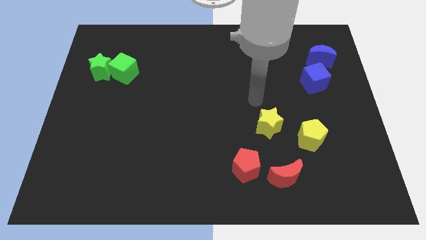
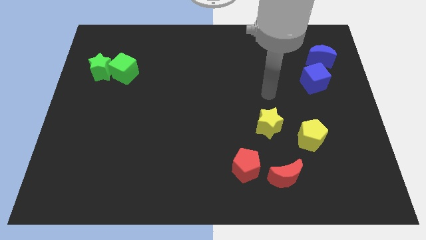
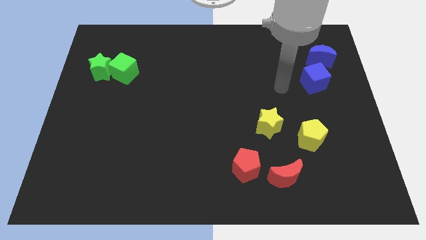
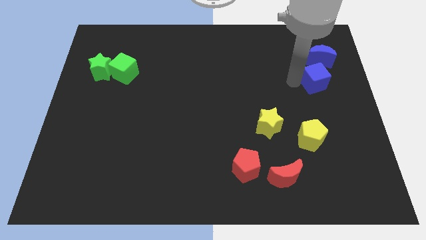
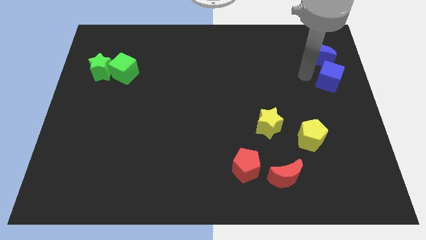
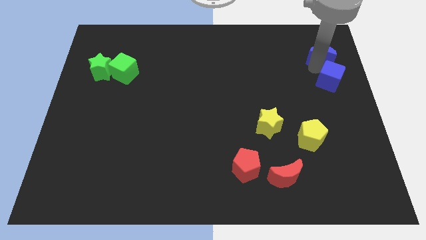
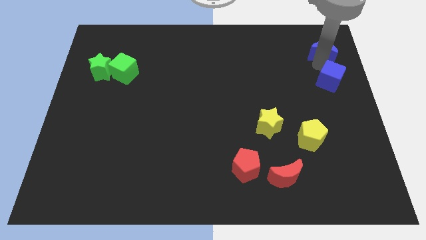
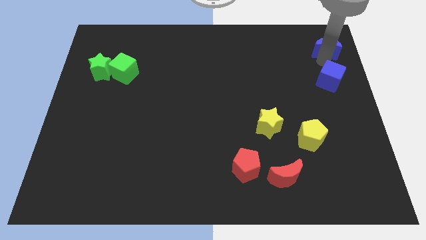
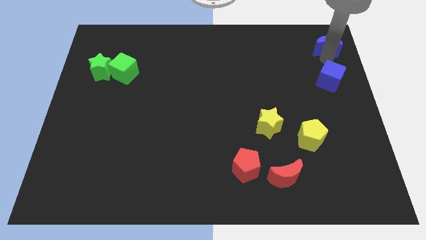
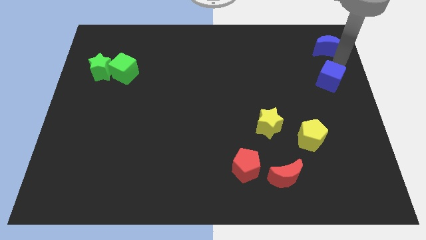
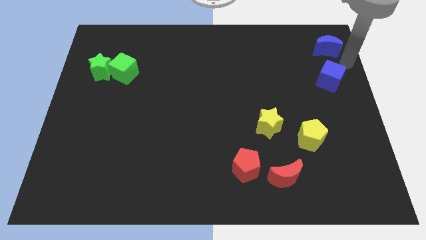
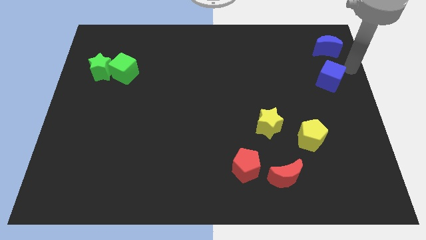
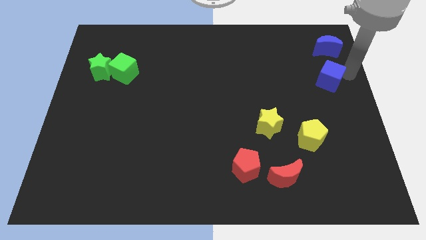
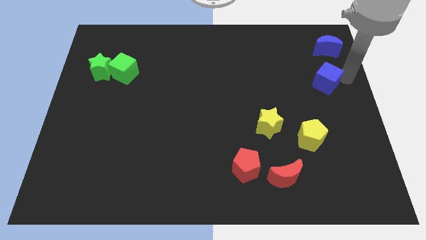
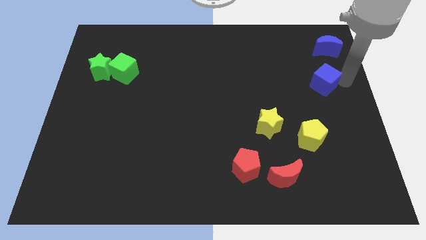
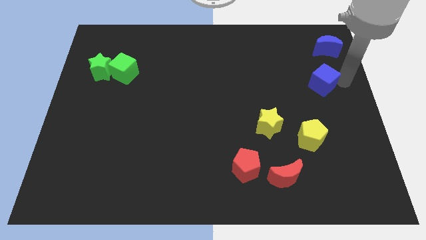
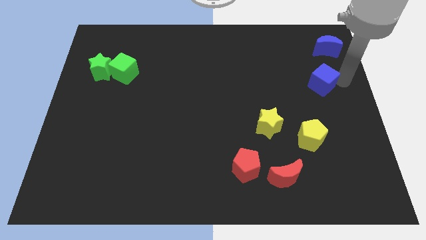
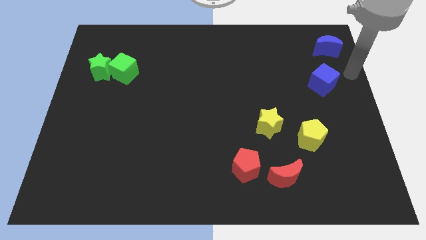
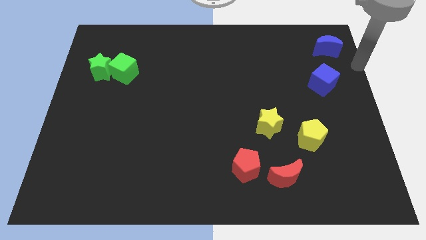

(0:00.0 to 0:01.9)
separate the blue cube from the blue moon

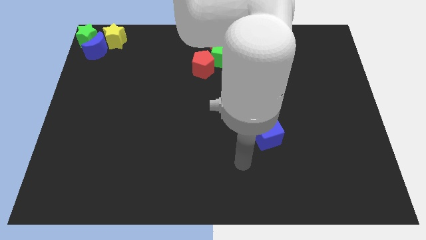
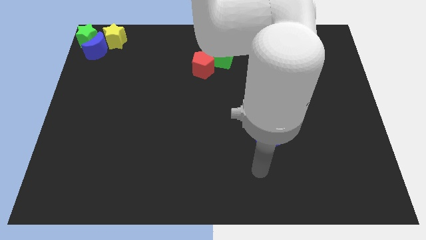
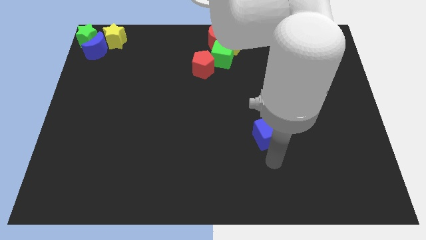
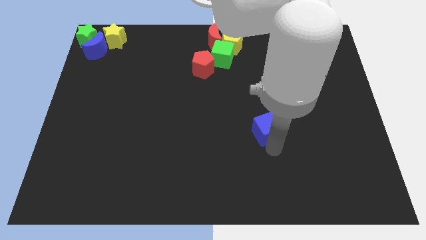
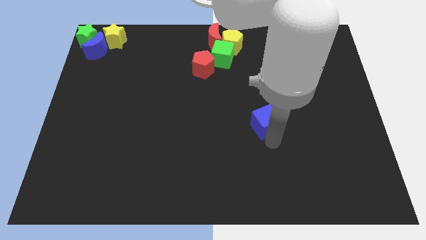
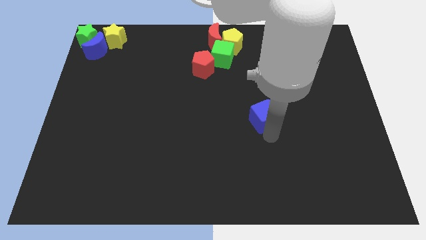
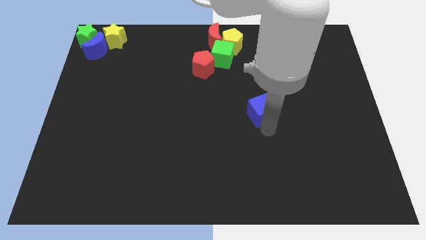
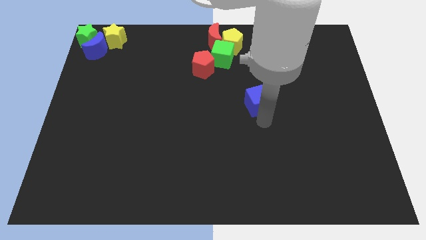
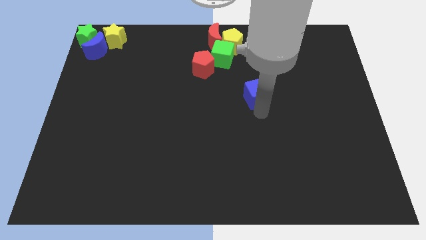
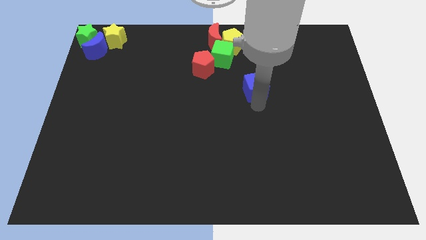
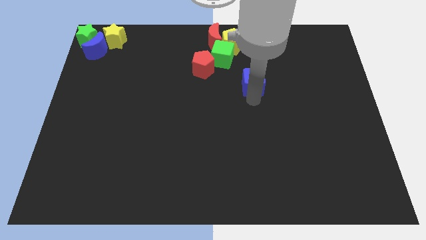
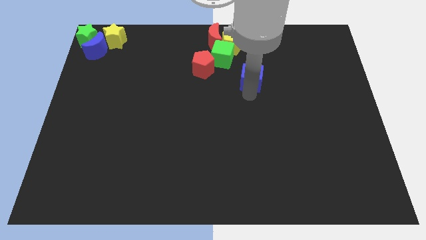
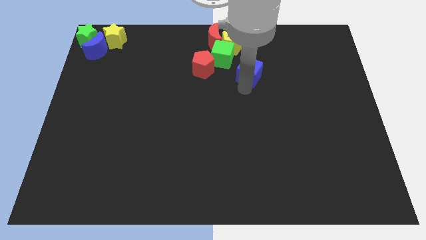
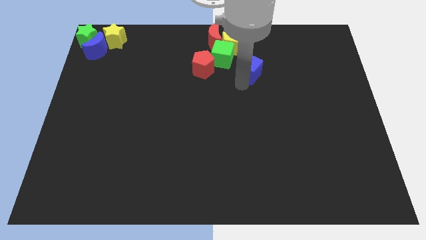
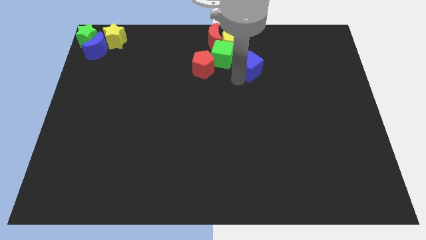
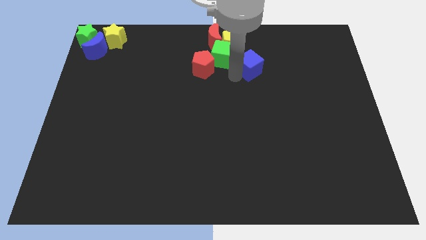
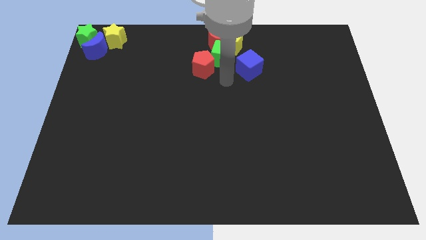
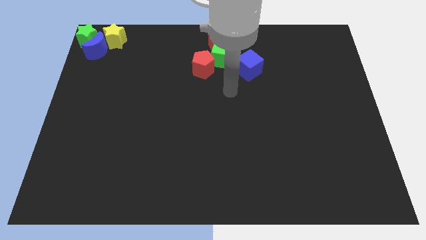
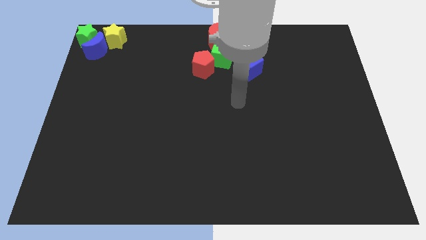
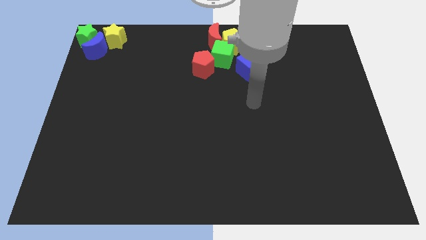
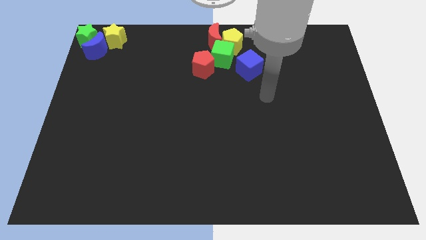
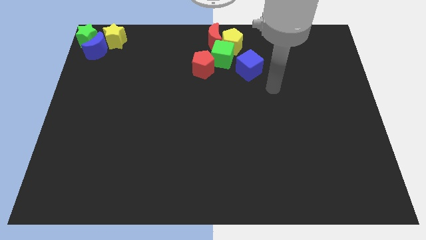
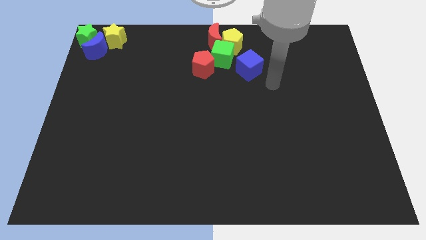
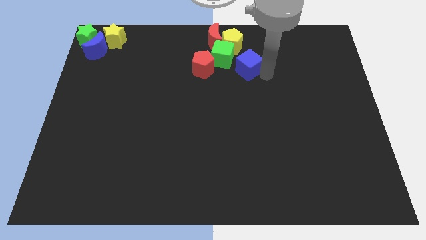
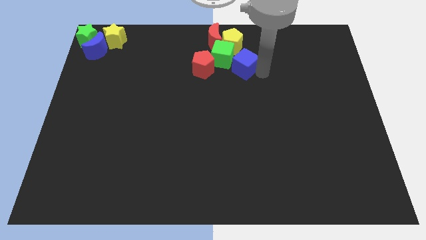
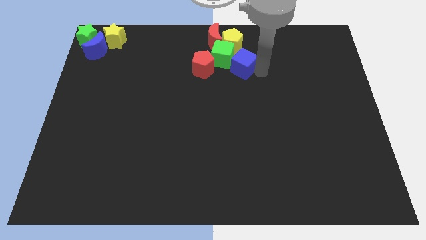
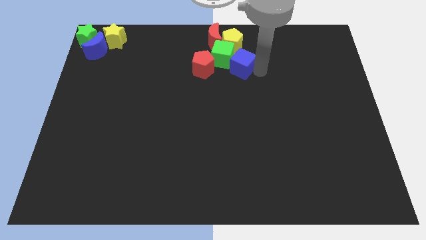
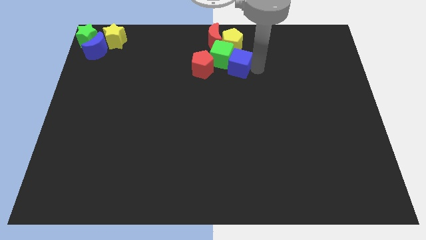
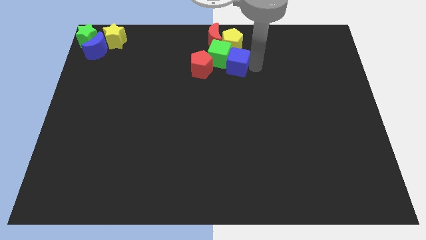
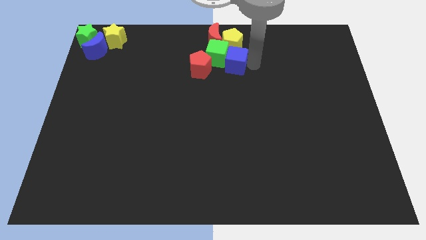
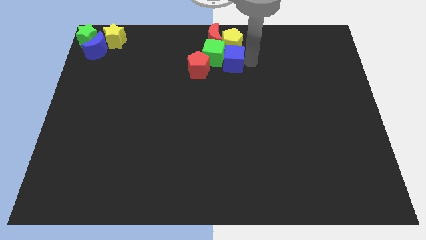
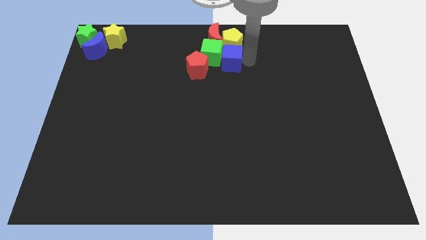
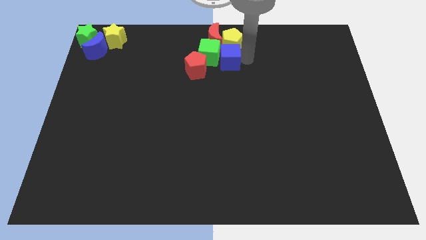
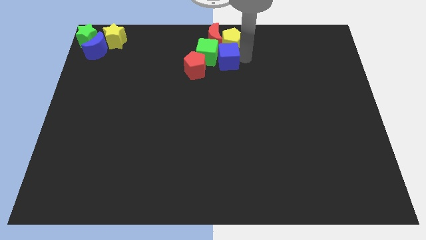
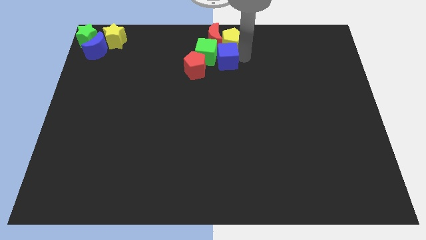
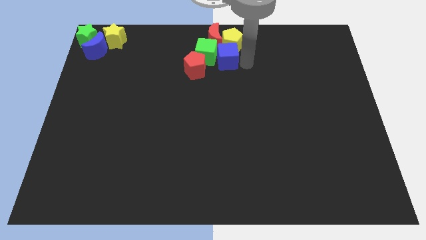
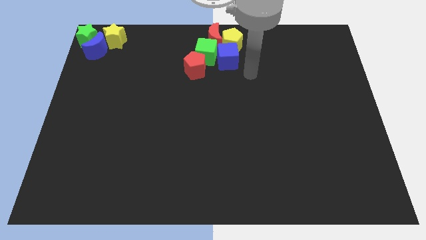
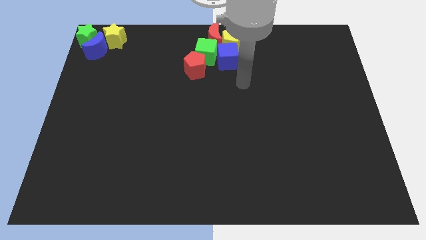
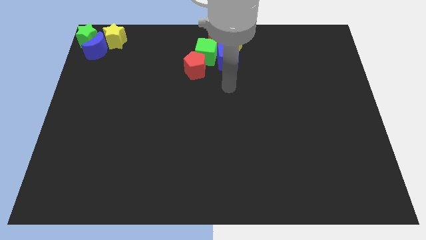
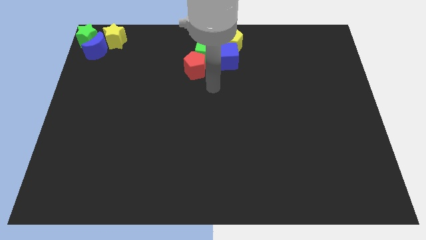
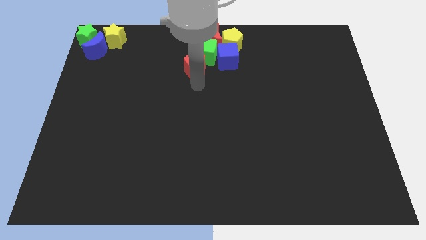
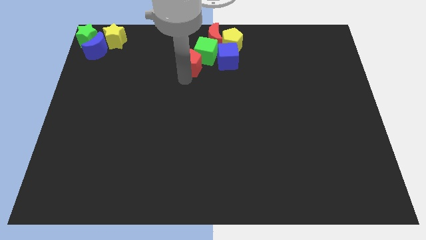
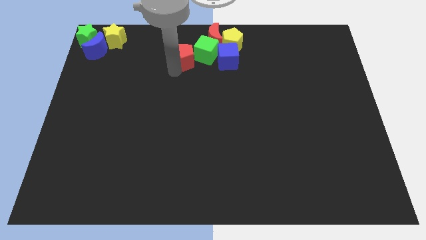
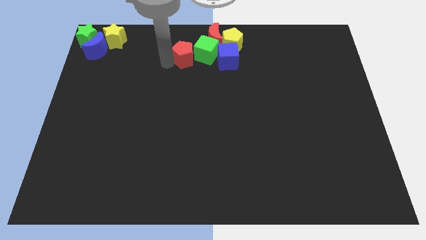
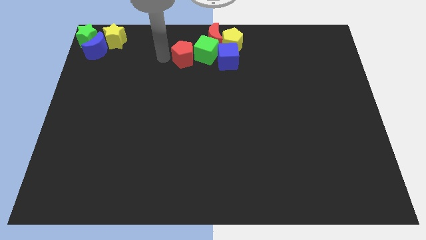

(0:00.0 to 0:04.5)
push green cube with blue cube

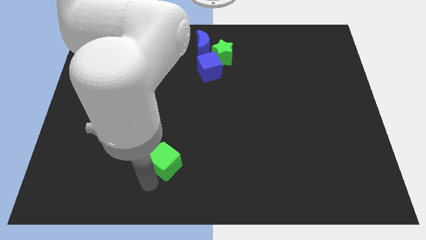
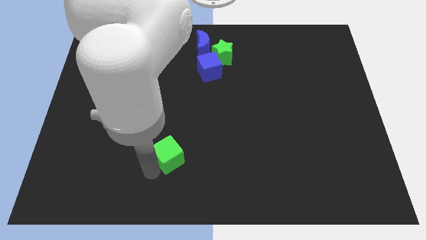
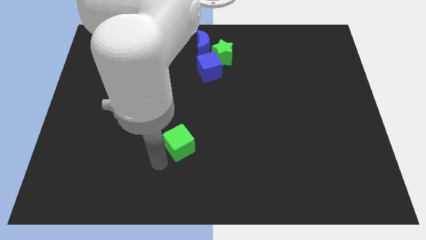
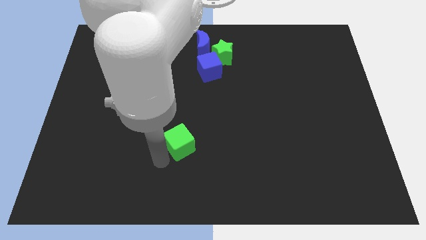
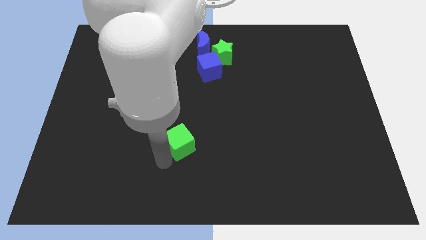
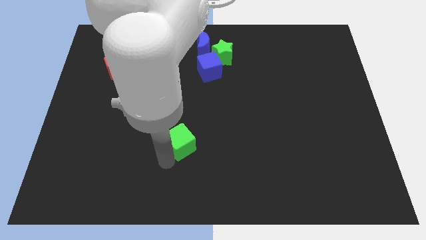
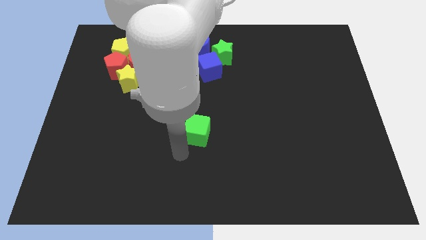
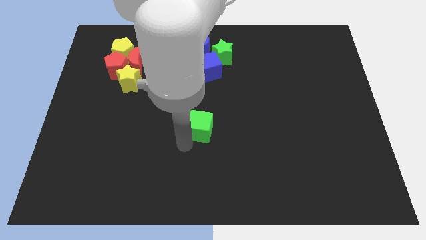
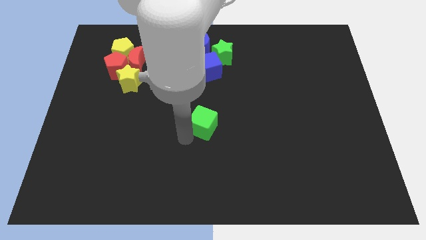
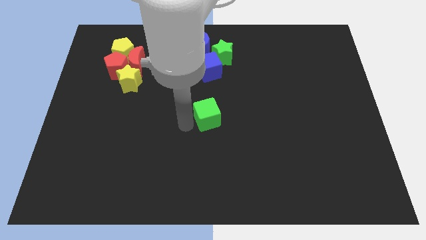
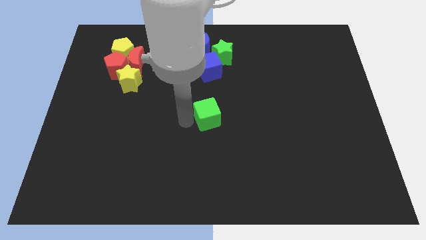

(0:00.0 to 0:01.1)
move the green cube to the center of the board

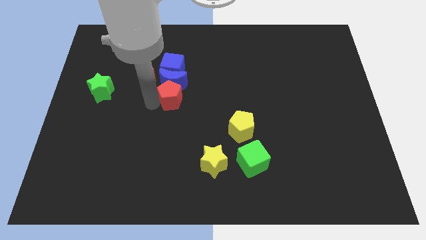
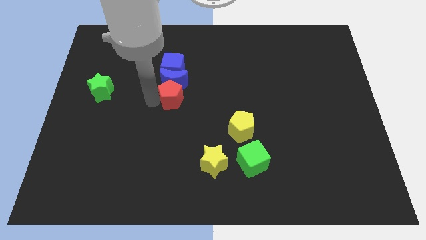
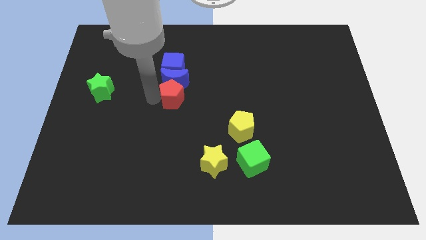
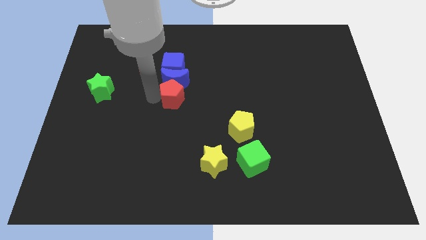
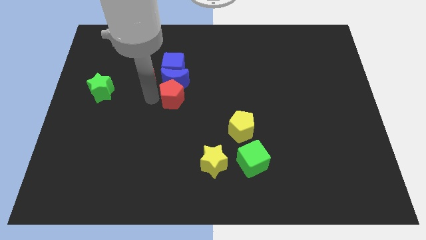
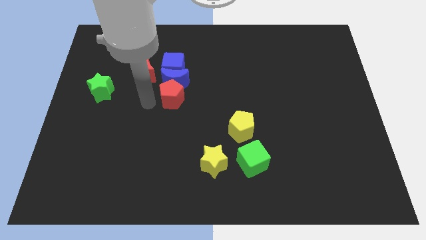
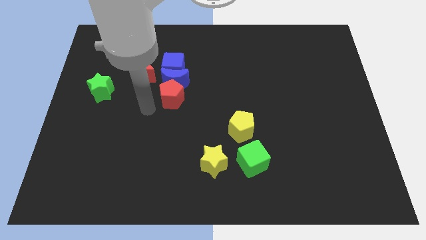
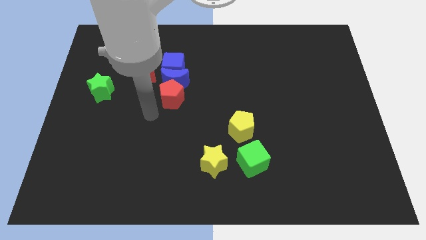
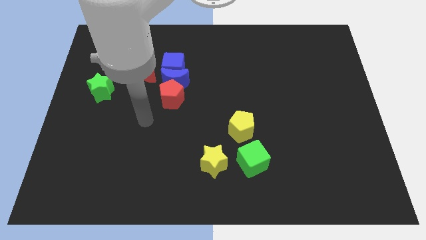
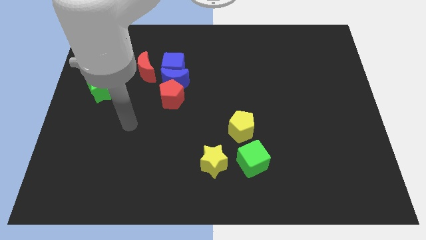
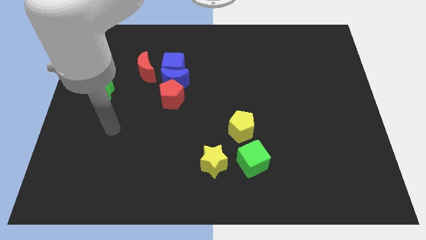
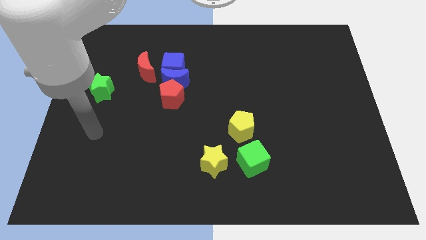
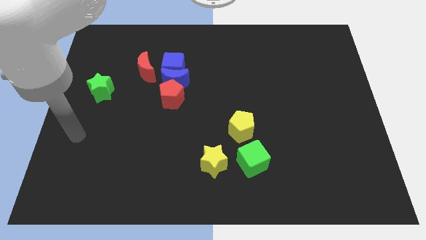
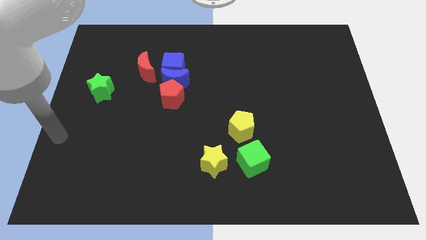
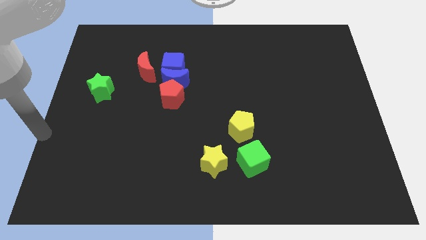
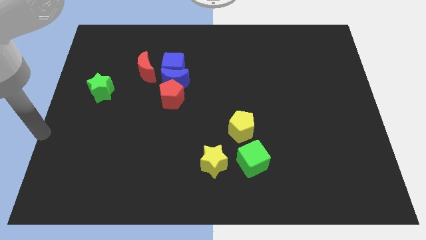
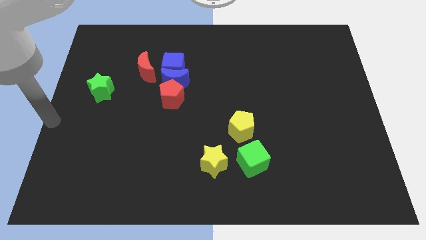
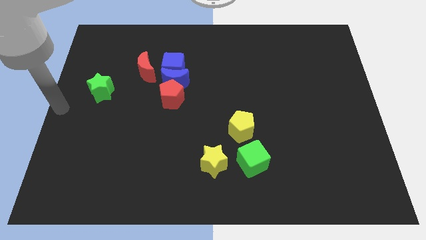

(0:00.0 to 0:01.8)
move the arm towards the left center corner of the board
